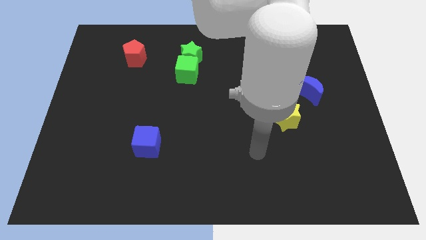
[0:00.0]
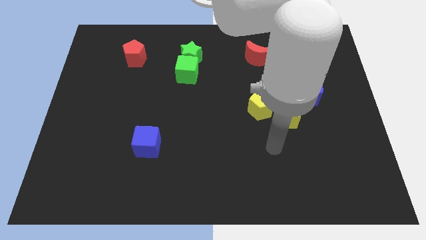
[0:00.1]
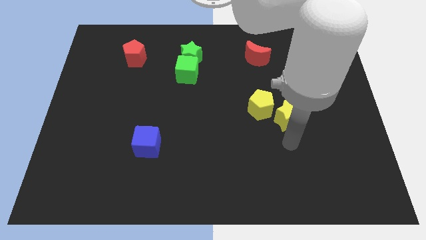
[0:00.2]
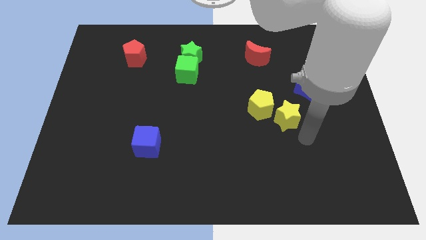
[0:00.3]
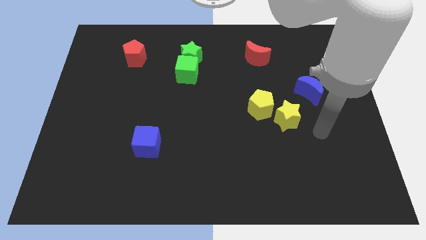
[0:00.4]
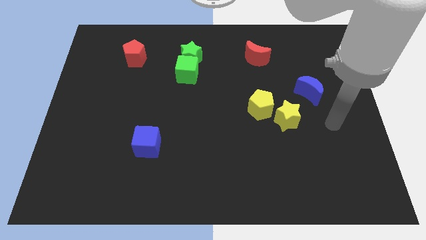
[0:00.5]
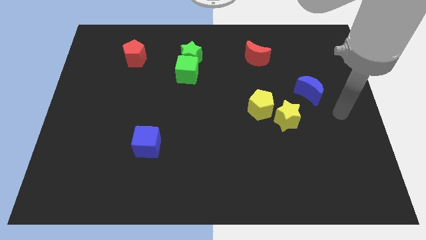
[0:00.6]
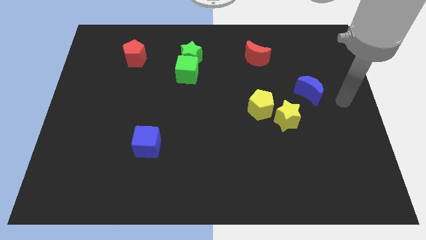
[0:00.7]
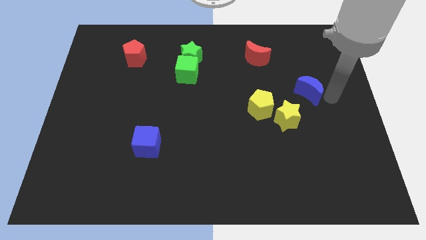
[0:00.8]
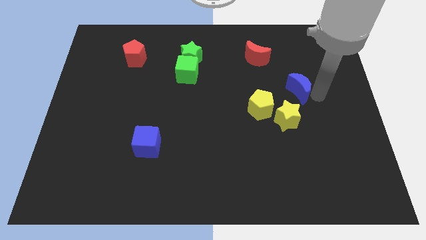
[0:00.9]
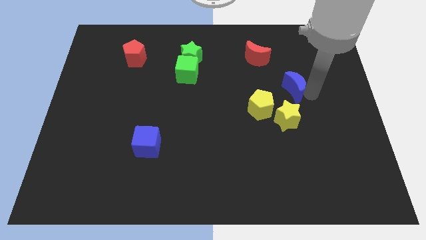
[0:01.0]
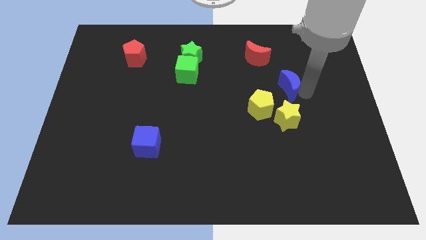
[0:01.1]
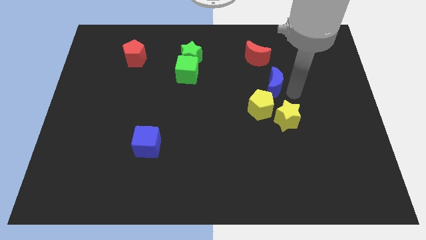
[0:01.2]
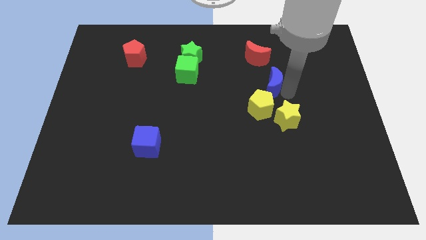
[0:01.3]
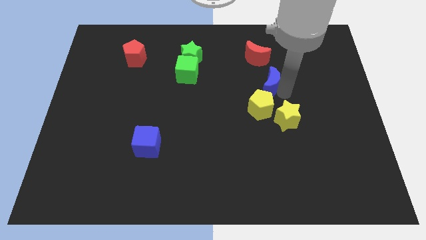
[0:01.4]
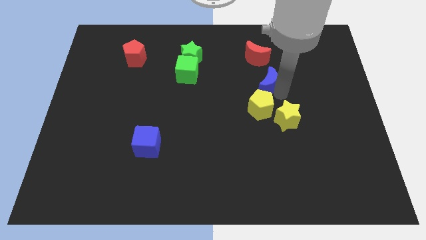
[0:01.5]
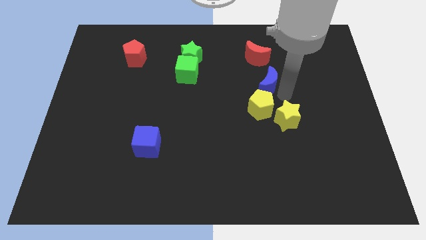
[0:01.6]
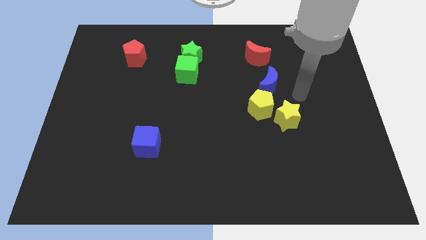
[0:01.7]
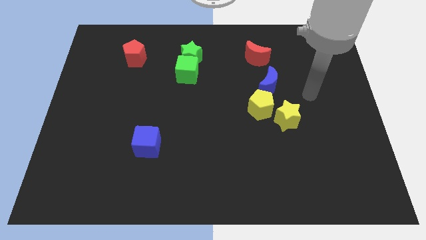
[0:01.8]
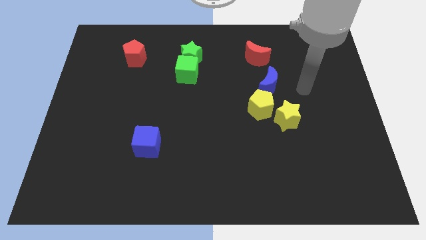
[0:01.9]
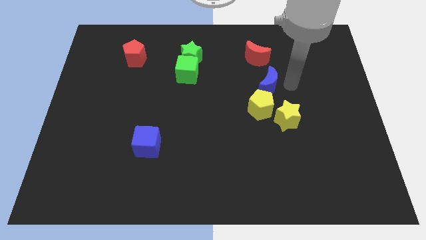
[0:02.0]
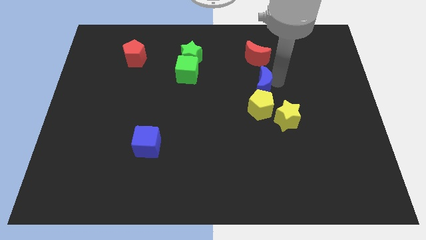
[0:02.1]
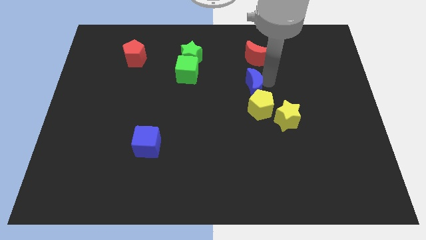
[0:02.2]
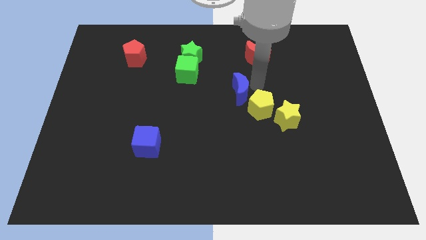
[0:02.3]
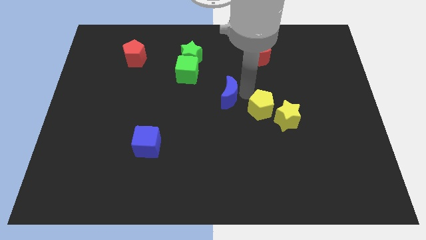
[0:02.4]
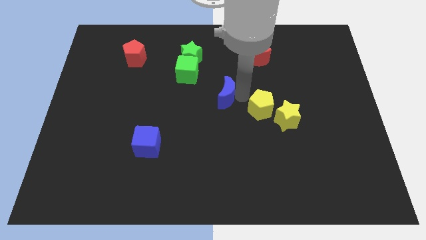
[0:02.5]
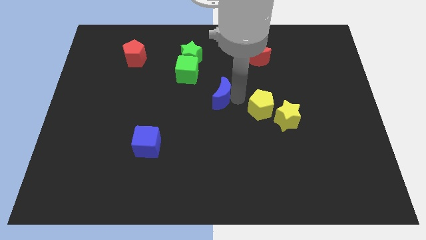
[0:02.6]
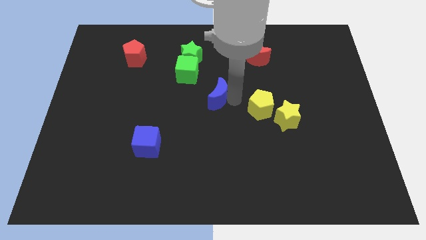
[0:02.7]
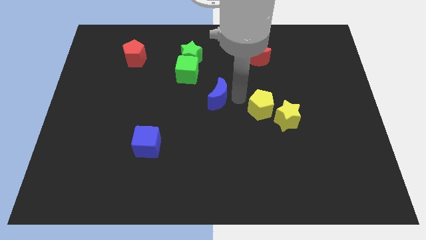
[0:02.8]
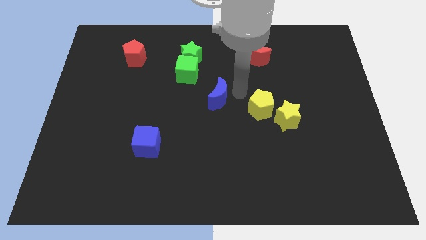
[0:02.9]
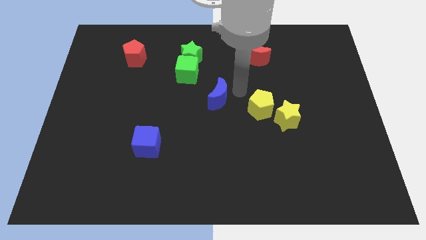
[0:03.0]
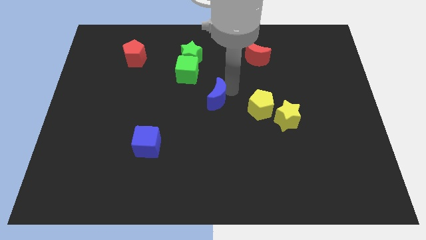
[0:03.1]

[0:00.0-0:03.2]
place the blue crescent at the center of the board

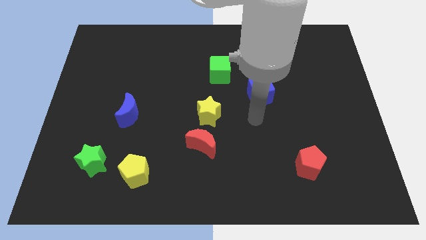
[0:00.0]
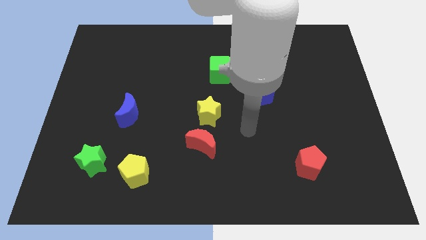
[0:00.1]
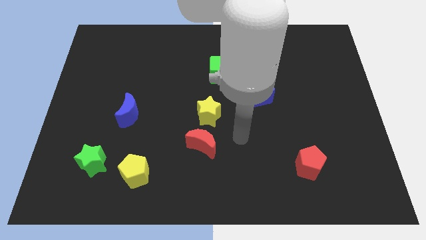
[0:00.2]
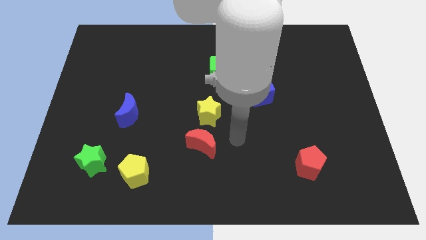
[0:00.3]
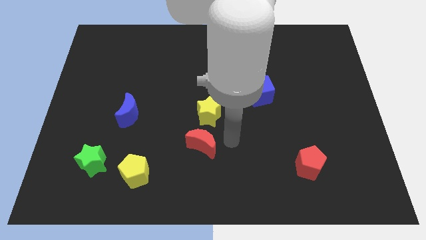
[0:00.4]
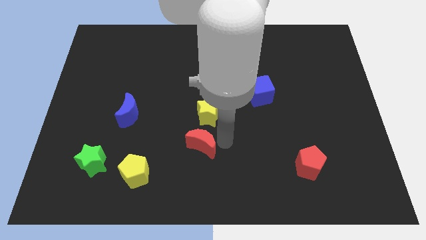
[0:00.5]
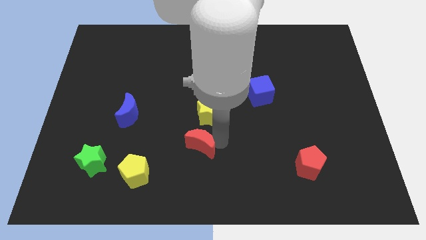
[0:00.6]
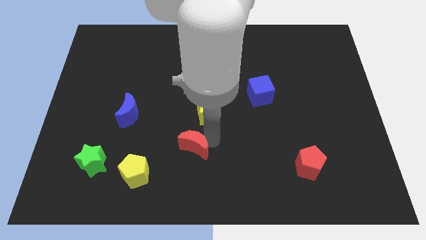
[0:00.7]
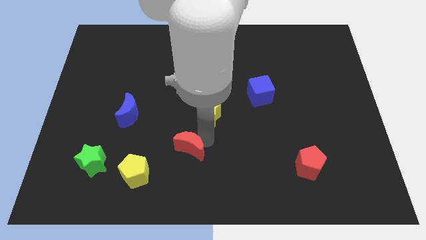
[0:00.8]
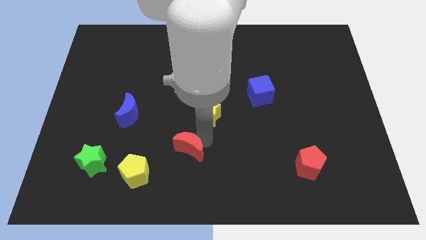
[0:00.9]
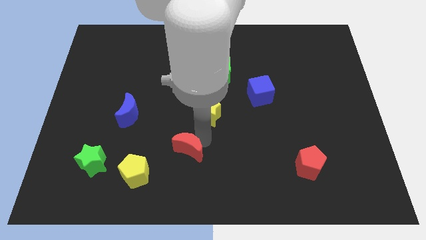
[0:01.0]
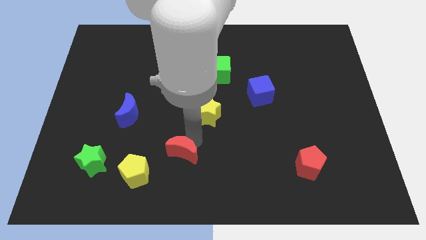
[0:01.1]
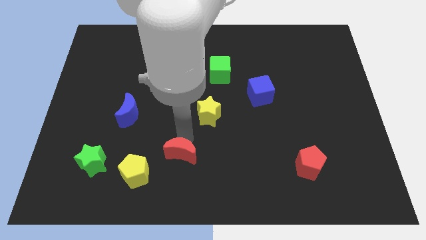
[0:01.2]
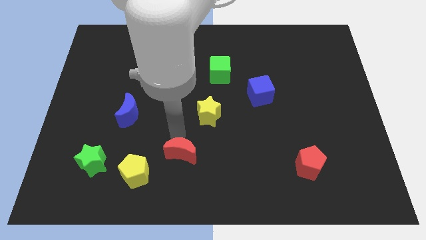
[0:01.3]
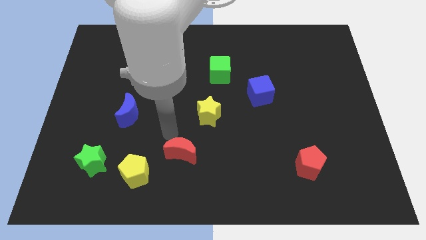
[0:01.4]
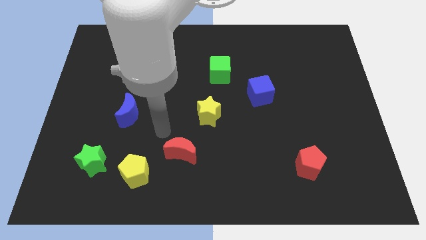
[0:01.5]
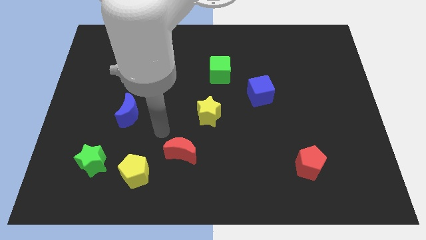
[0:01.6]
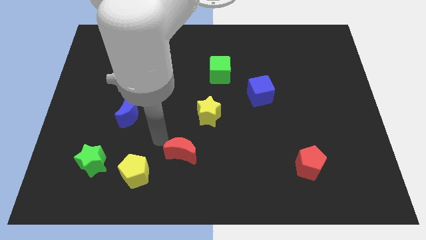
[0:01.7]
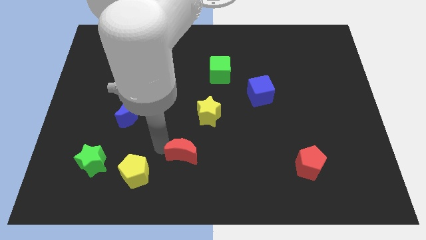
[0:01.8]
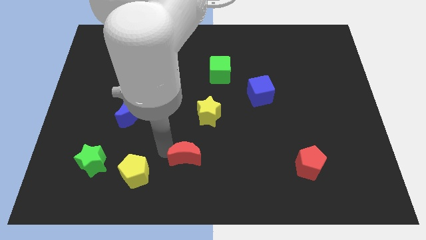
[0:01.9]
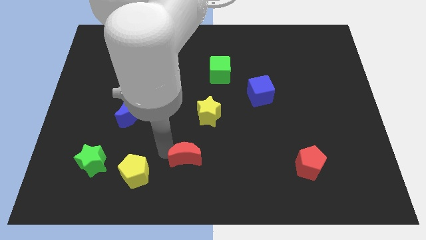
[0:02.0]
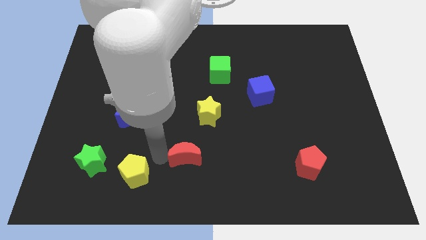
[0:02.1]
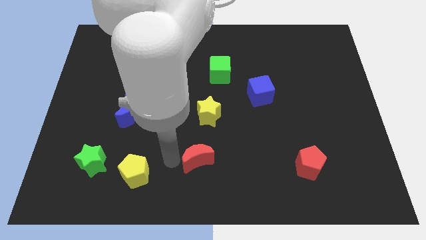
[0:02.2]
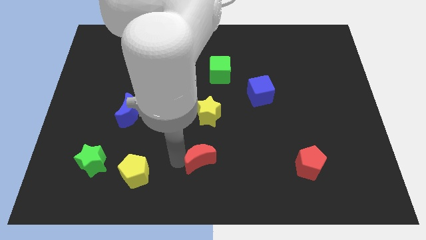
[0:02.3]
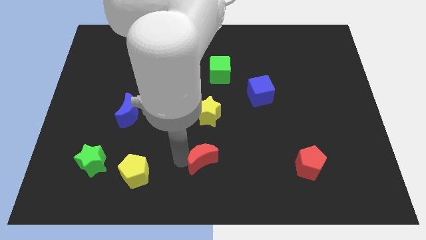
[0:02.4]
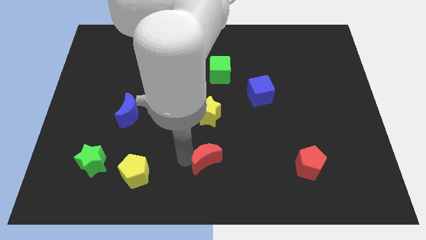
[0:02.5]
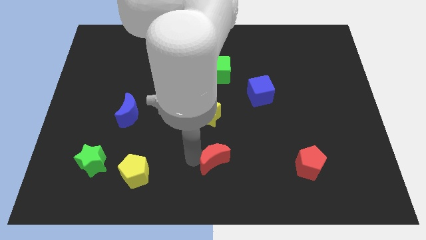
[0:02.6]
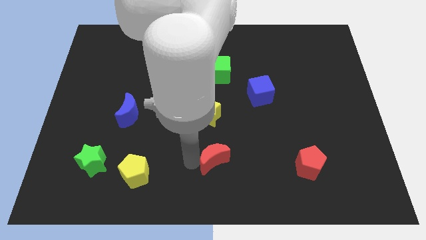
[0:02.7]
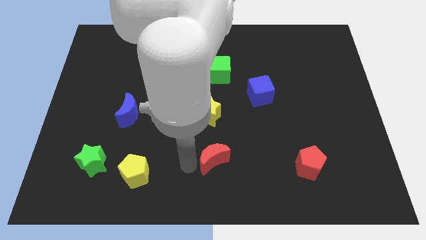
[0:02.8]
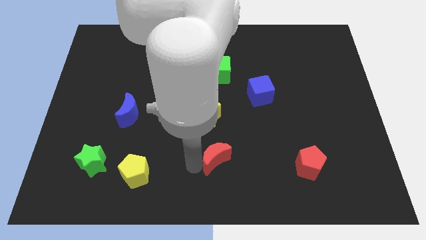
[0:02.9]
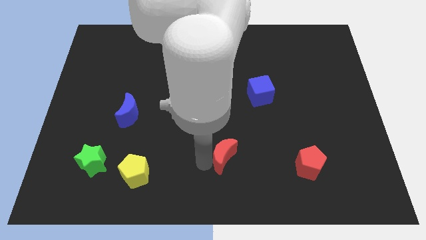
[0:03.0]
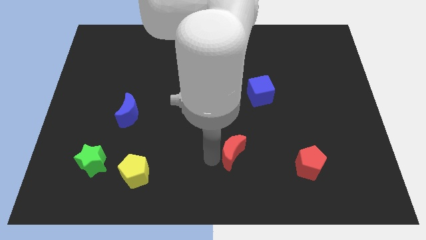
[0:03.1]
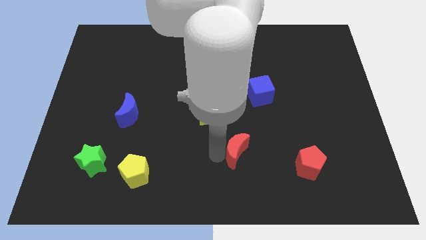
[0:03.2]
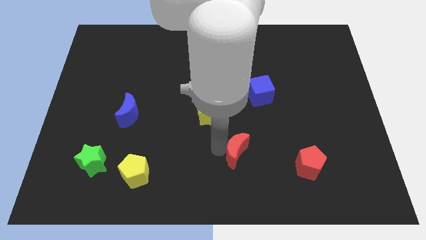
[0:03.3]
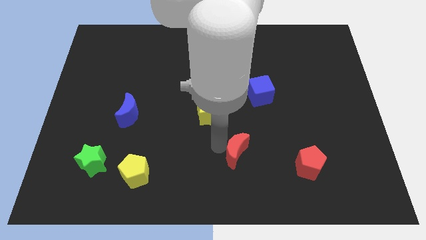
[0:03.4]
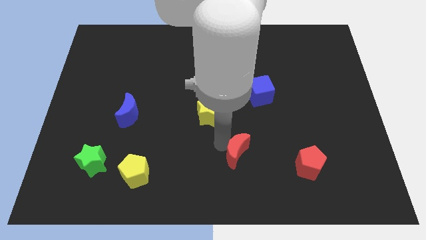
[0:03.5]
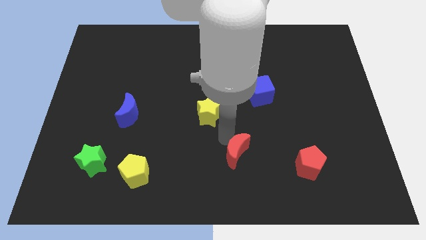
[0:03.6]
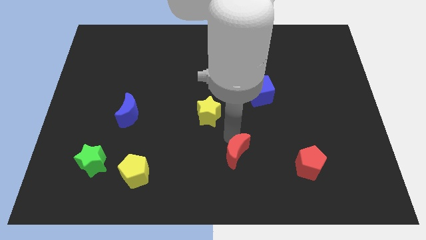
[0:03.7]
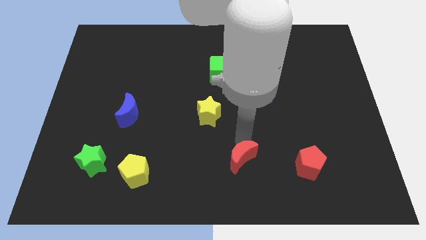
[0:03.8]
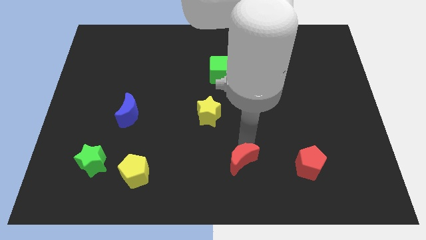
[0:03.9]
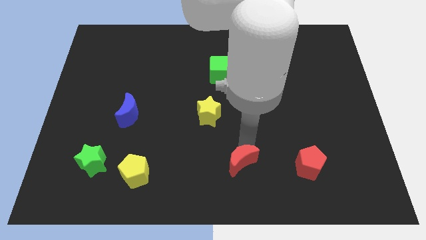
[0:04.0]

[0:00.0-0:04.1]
push red crescent towards the red pentagon

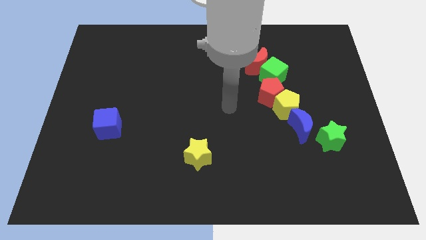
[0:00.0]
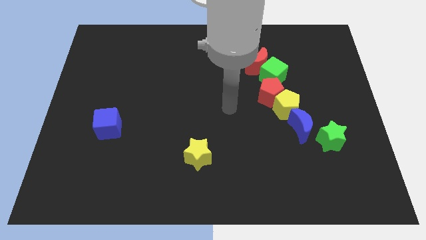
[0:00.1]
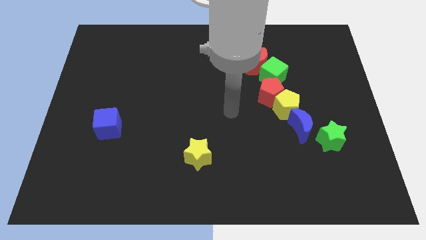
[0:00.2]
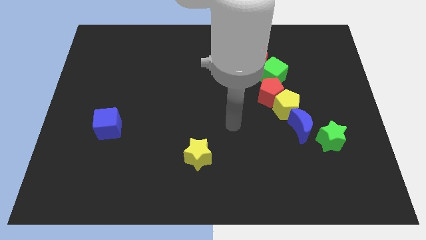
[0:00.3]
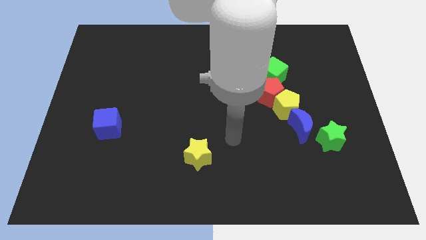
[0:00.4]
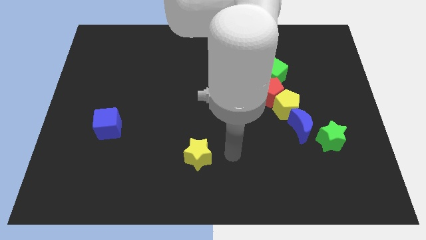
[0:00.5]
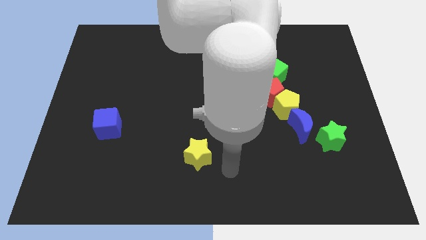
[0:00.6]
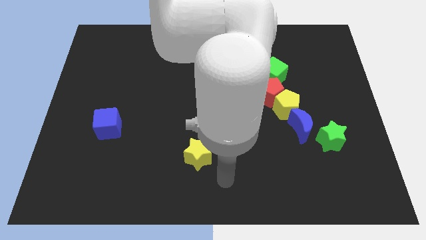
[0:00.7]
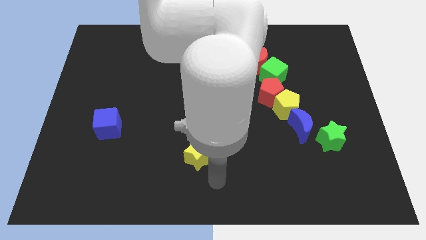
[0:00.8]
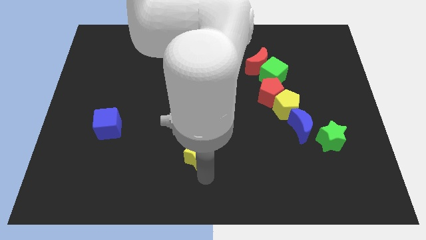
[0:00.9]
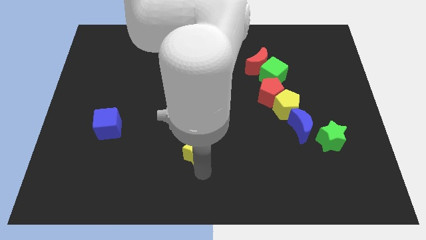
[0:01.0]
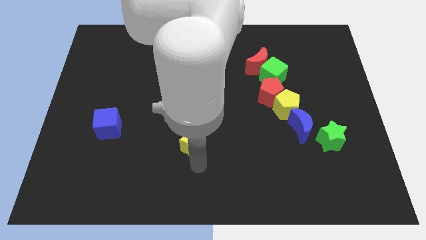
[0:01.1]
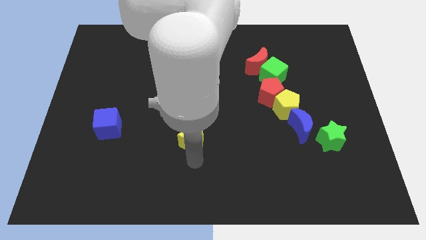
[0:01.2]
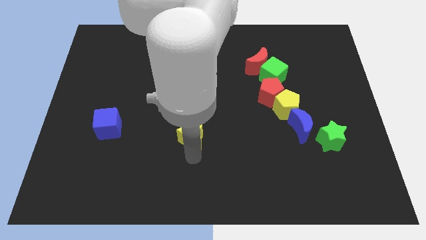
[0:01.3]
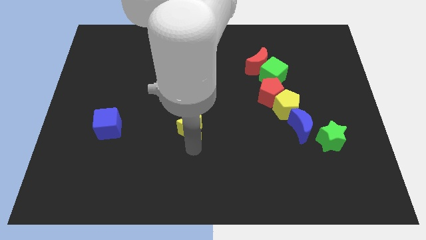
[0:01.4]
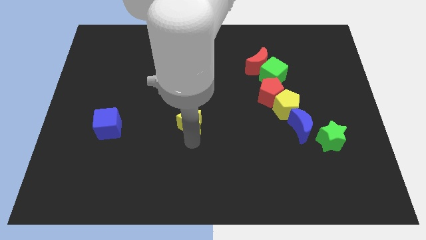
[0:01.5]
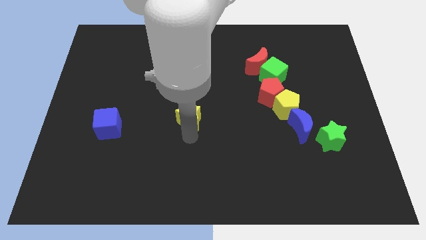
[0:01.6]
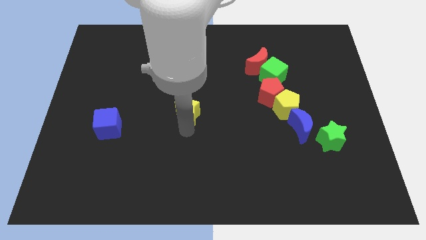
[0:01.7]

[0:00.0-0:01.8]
move the yellow star slightly up
